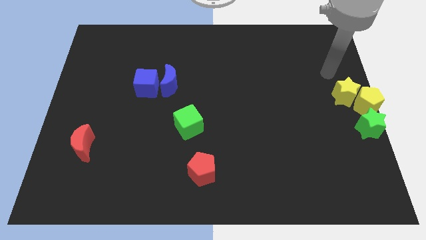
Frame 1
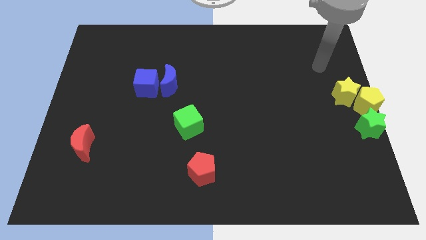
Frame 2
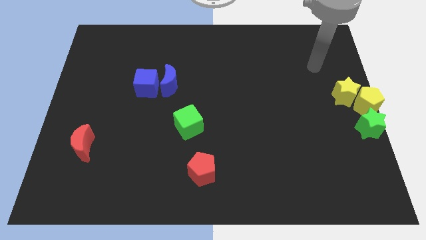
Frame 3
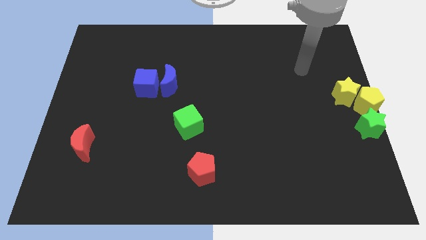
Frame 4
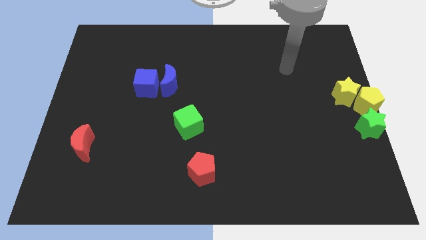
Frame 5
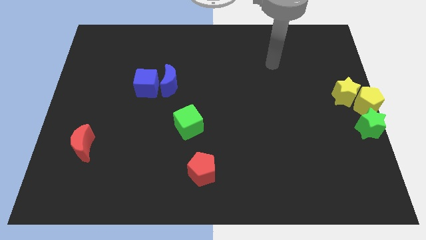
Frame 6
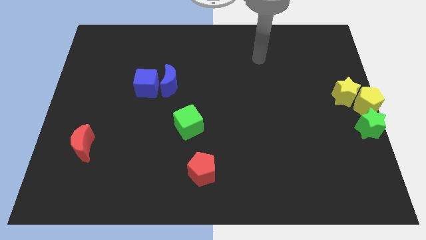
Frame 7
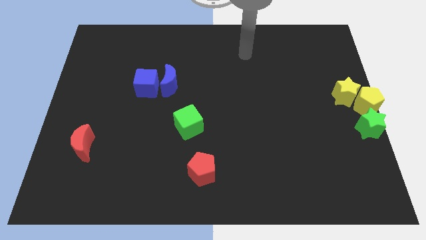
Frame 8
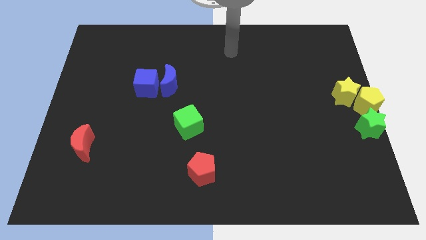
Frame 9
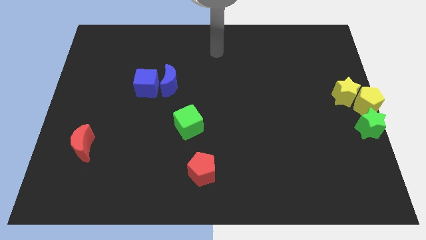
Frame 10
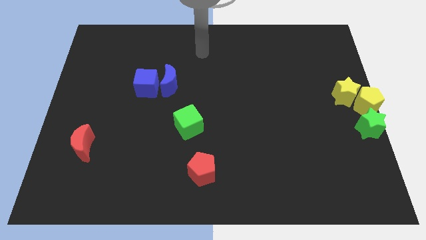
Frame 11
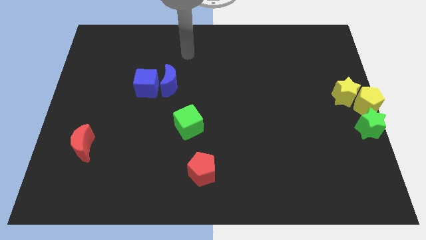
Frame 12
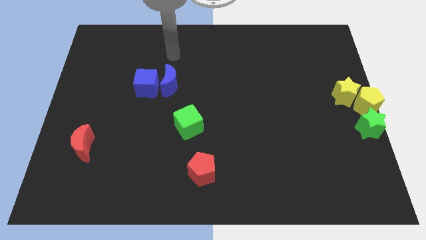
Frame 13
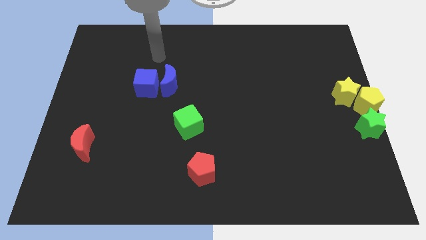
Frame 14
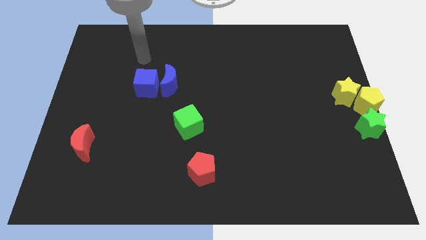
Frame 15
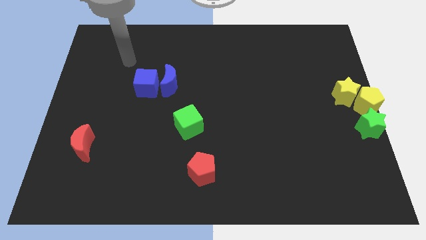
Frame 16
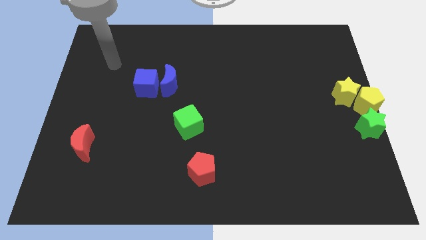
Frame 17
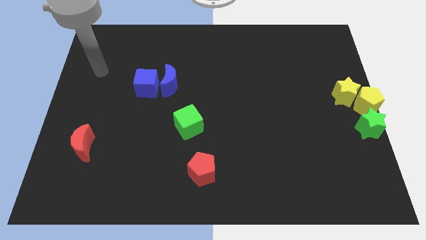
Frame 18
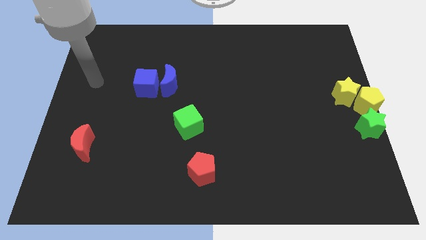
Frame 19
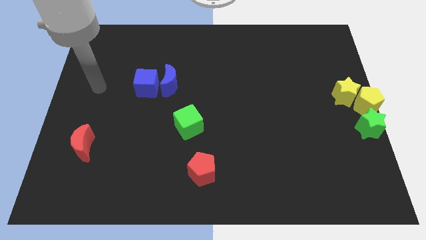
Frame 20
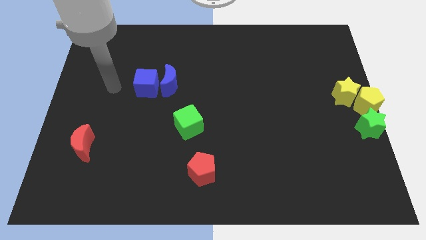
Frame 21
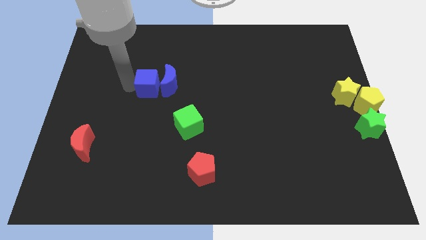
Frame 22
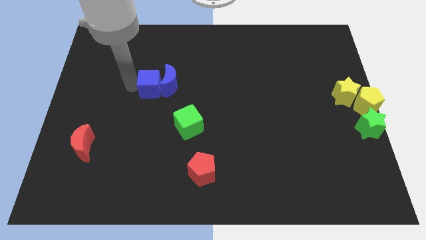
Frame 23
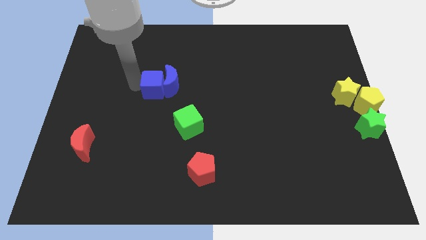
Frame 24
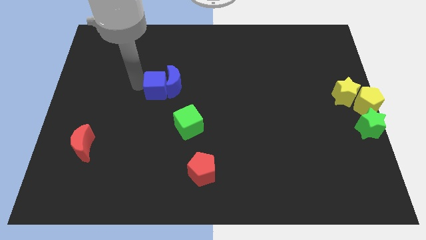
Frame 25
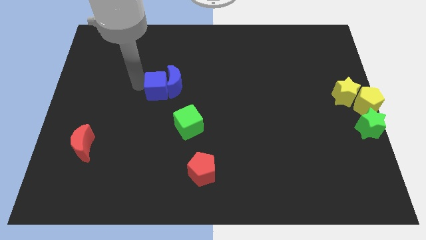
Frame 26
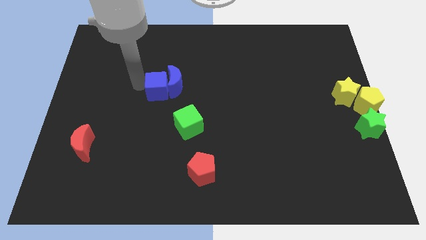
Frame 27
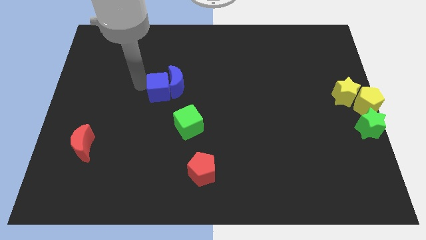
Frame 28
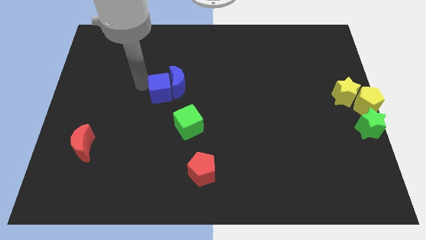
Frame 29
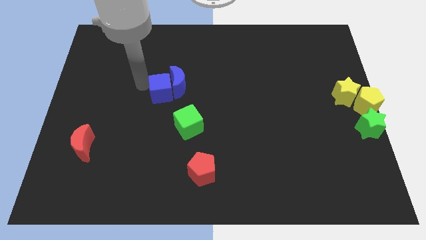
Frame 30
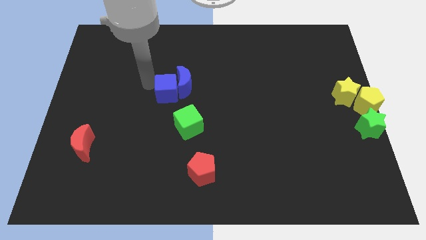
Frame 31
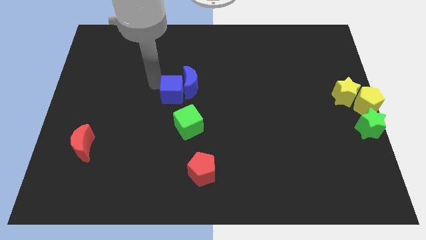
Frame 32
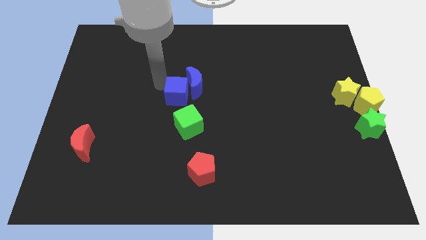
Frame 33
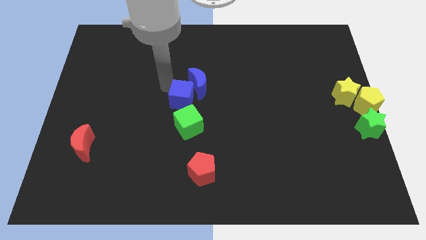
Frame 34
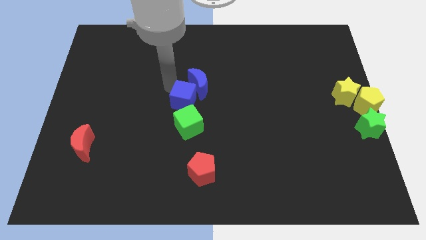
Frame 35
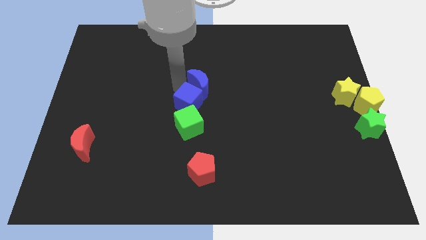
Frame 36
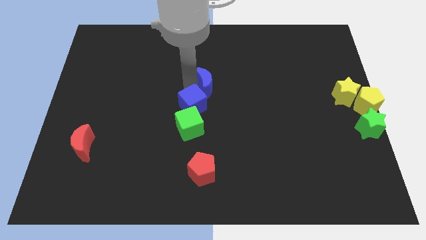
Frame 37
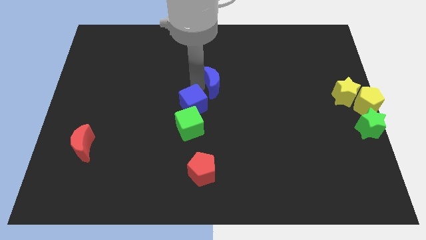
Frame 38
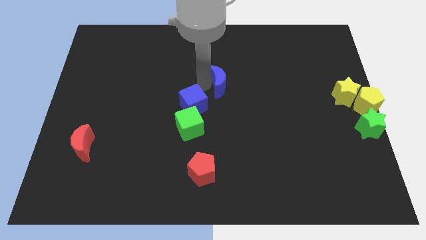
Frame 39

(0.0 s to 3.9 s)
move the blue cube towards the green cube

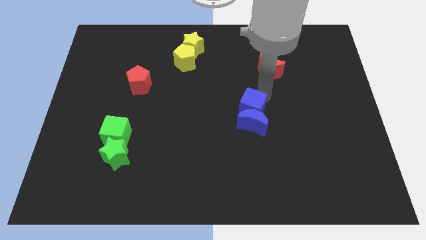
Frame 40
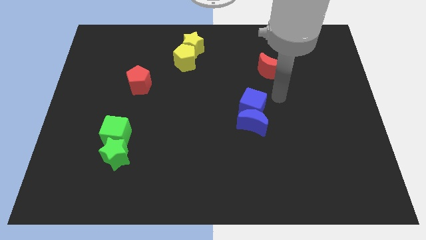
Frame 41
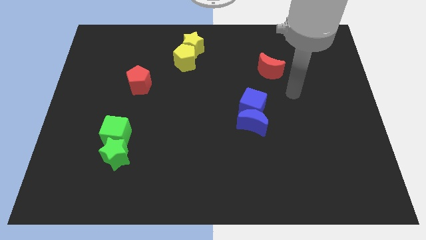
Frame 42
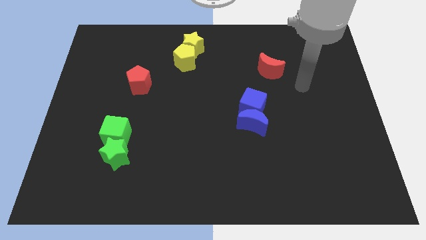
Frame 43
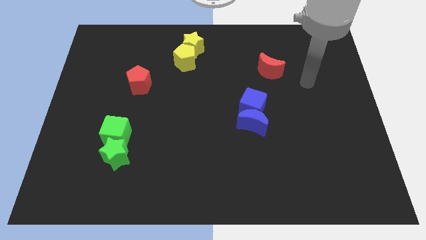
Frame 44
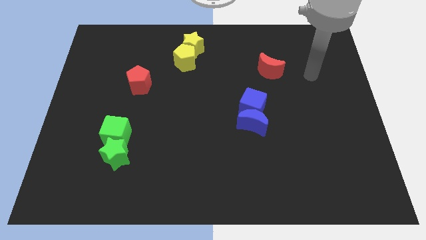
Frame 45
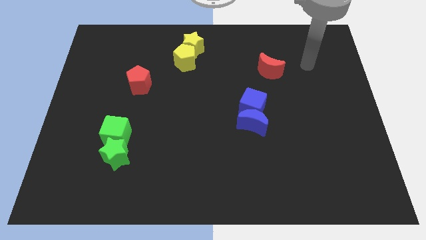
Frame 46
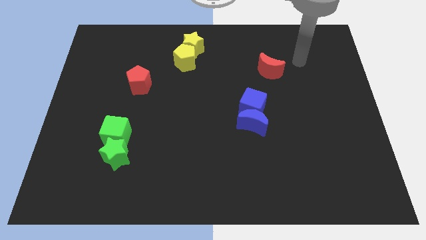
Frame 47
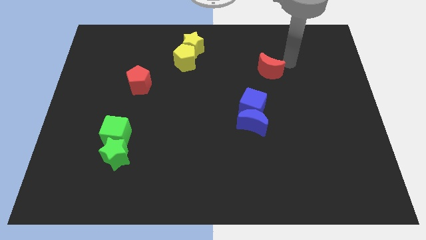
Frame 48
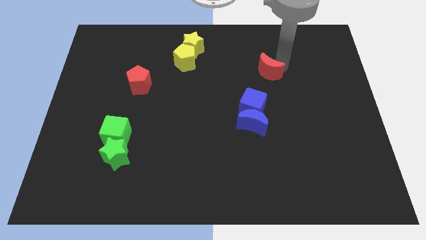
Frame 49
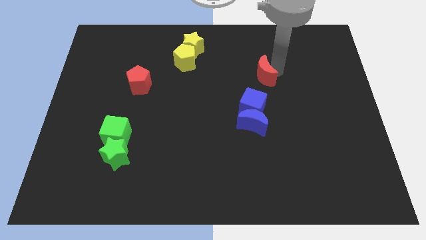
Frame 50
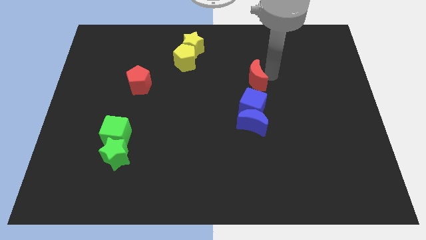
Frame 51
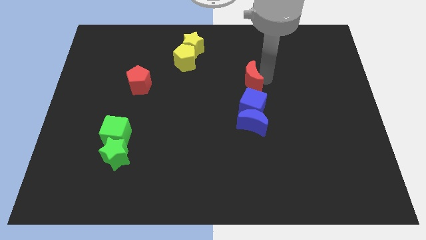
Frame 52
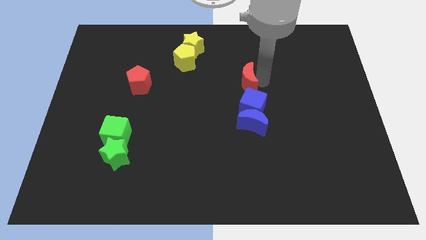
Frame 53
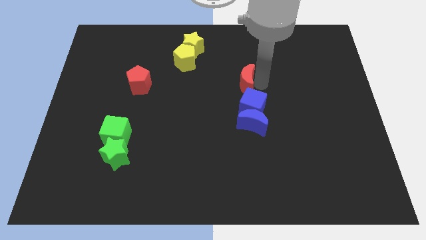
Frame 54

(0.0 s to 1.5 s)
put the red crescent above the blue cube

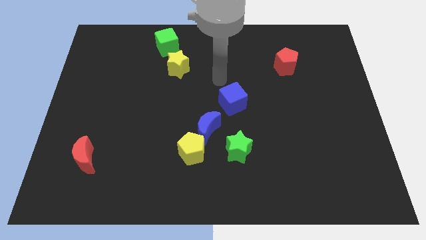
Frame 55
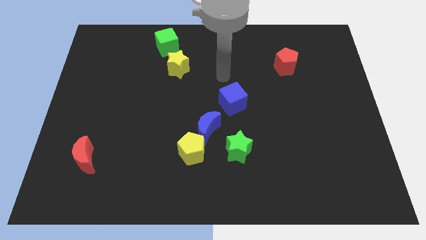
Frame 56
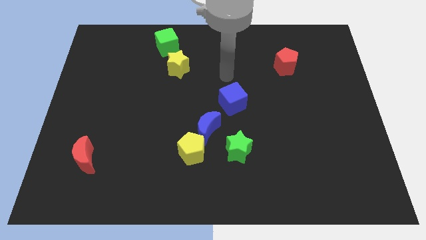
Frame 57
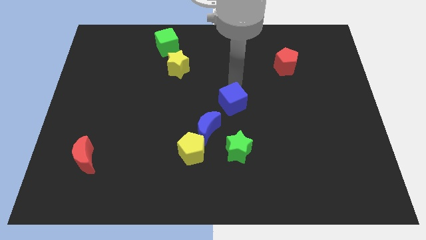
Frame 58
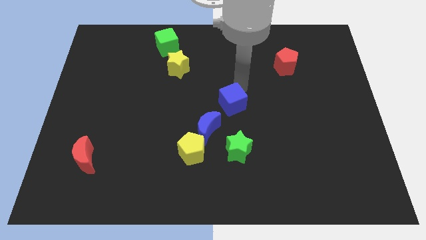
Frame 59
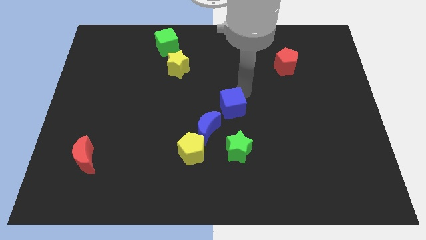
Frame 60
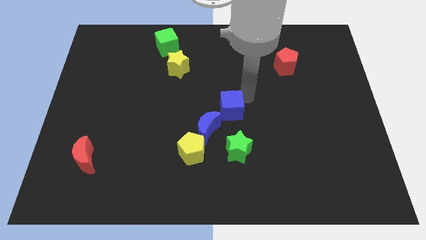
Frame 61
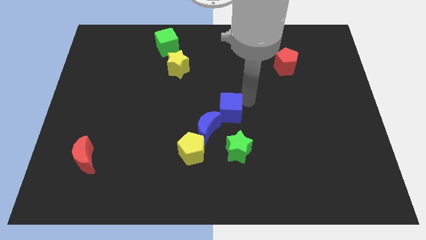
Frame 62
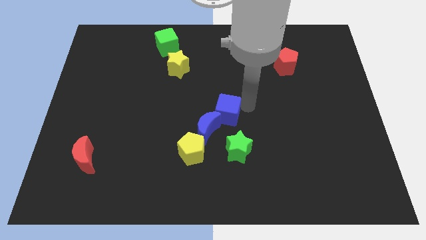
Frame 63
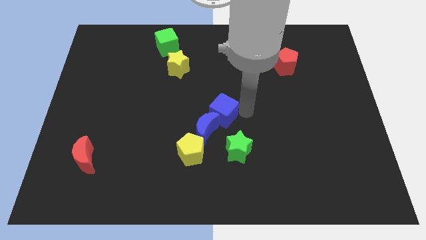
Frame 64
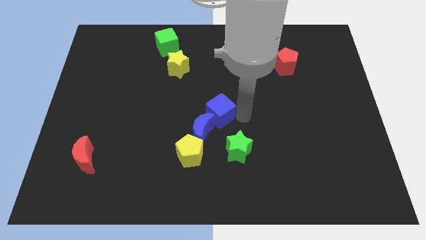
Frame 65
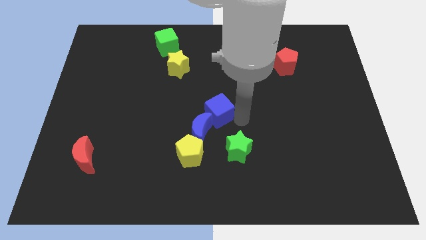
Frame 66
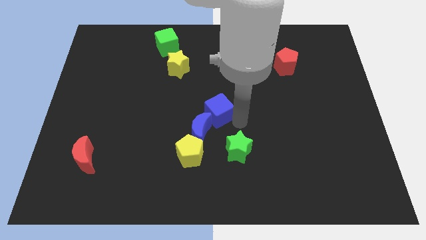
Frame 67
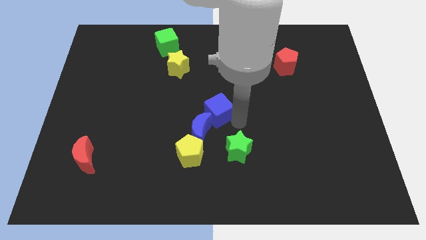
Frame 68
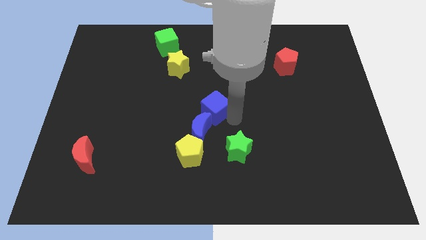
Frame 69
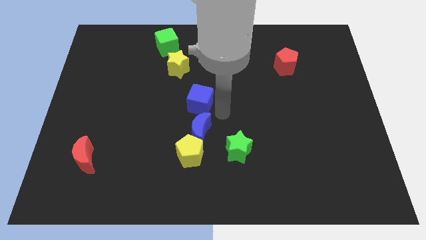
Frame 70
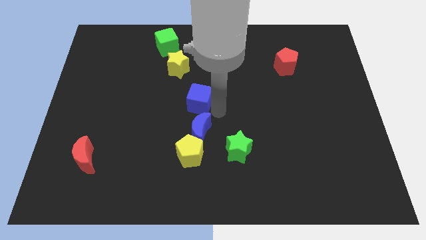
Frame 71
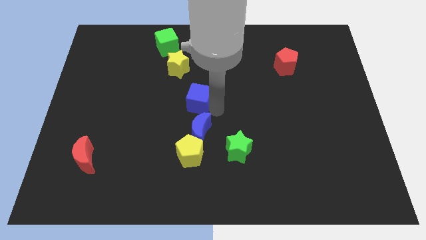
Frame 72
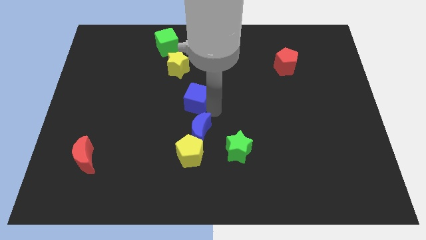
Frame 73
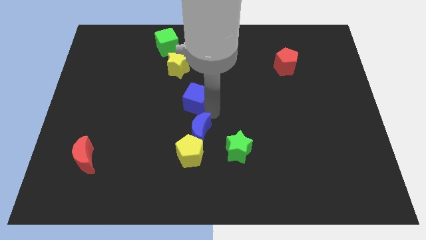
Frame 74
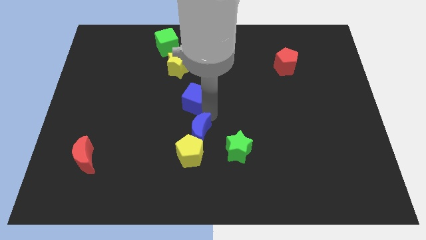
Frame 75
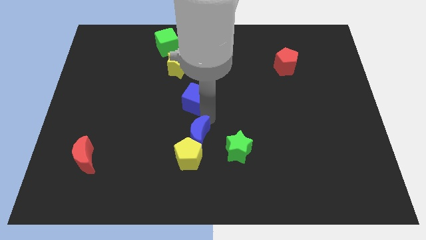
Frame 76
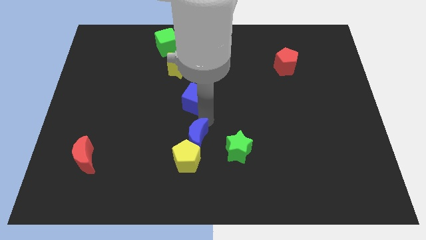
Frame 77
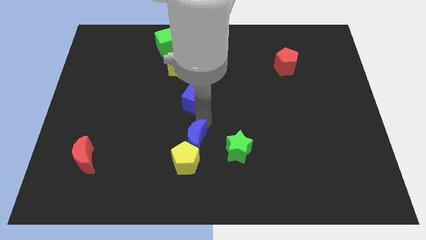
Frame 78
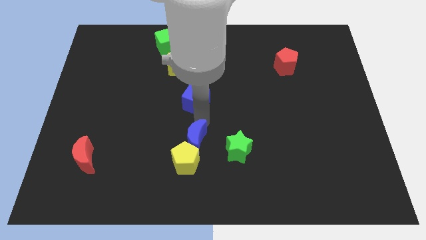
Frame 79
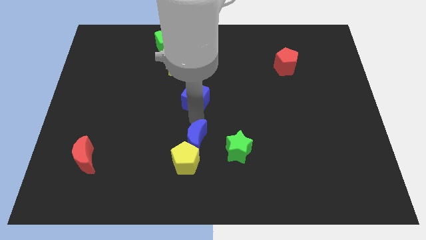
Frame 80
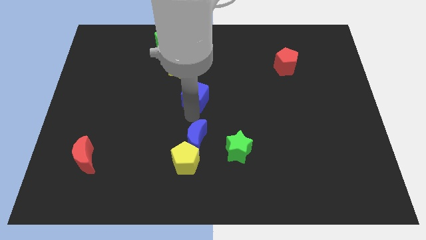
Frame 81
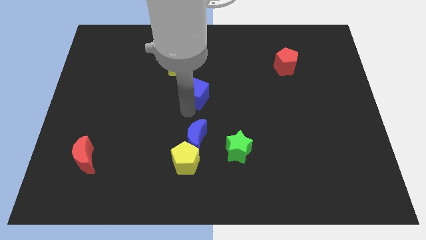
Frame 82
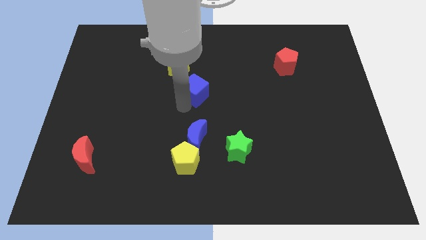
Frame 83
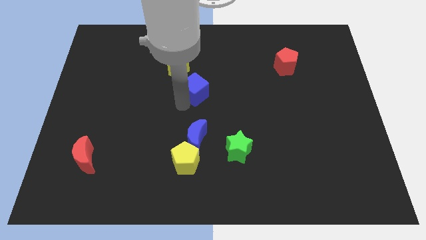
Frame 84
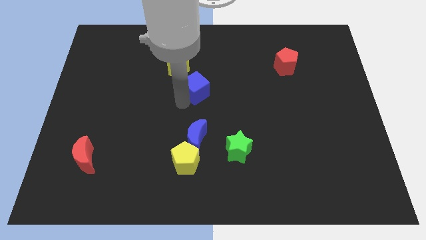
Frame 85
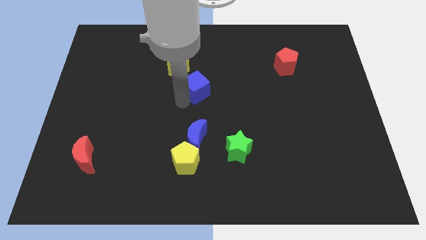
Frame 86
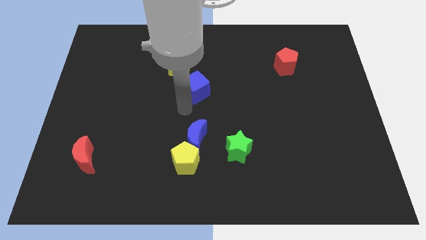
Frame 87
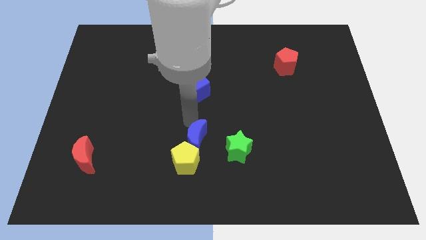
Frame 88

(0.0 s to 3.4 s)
place the blue cube vertically on the top side of the blue crescent

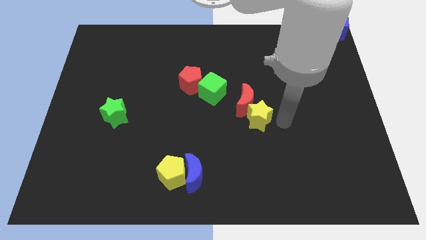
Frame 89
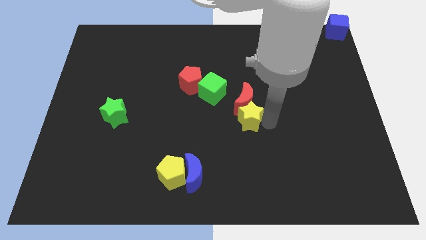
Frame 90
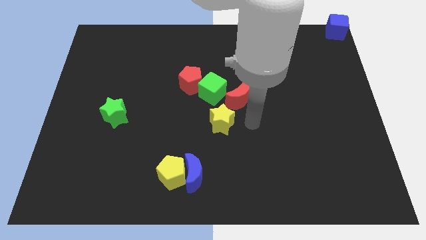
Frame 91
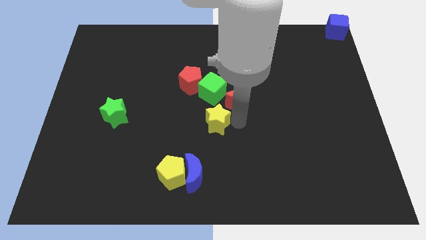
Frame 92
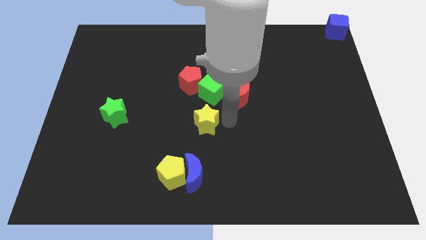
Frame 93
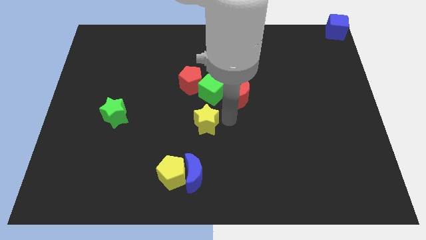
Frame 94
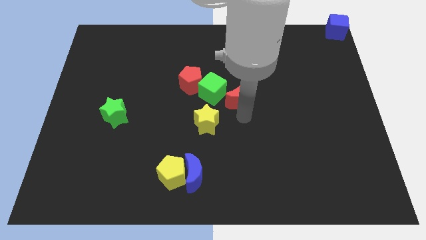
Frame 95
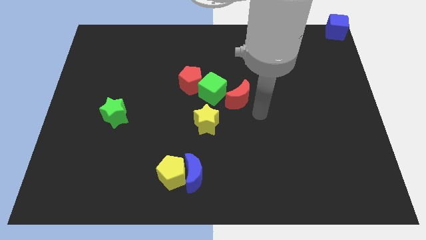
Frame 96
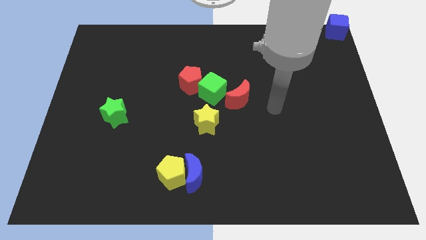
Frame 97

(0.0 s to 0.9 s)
place the yellow star at the bottom of green cube
